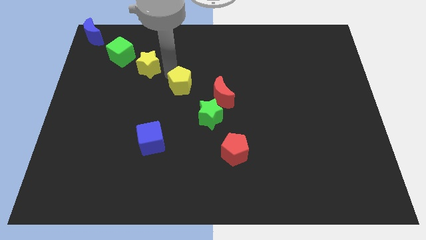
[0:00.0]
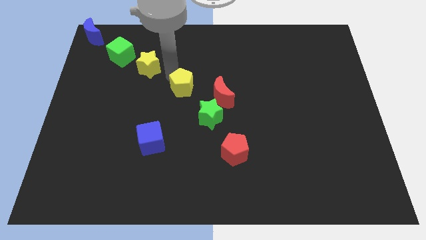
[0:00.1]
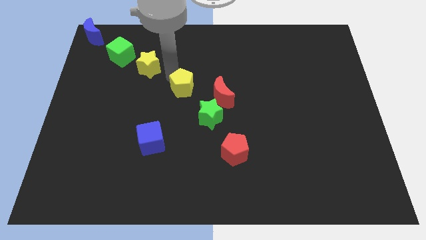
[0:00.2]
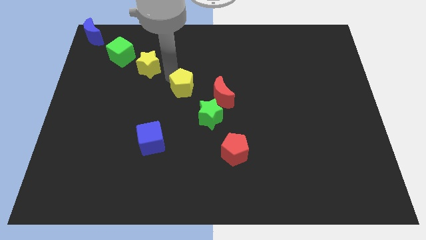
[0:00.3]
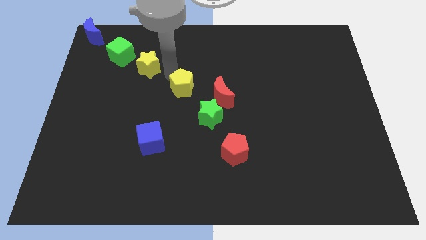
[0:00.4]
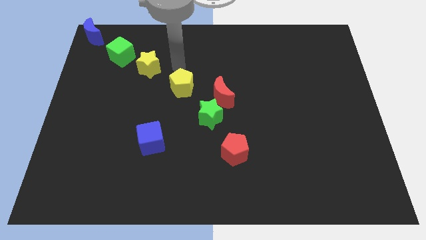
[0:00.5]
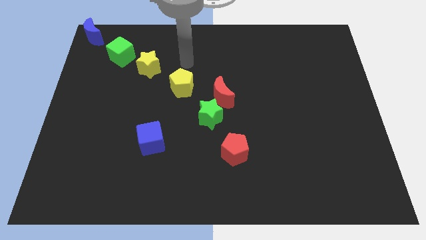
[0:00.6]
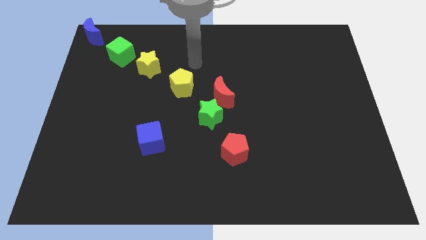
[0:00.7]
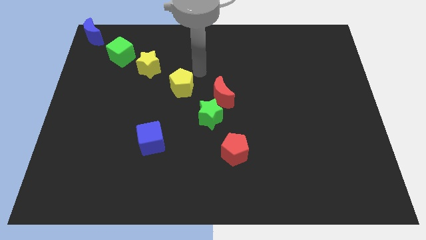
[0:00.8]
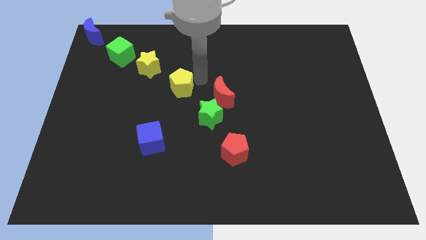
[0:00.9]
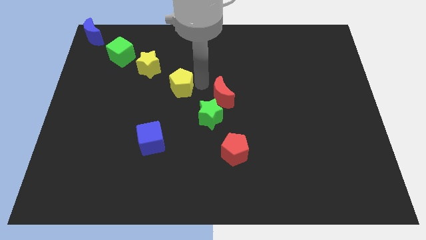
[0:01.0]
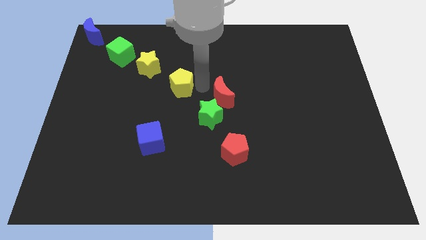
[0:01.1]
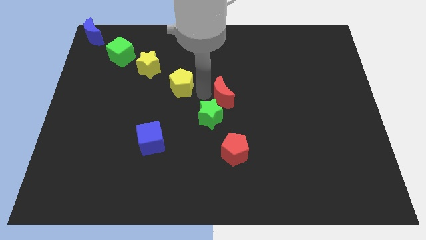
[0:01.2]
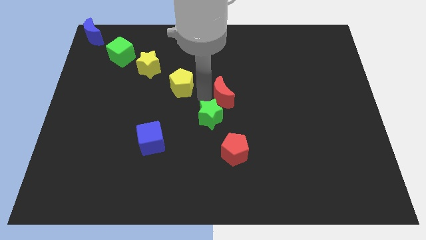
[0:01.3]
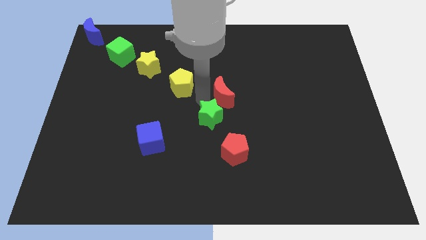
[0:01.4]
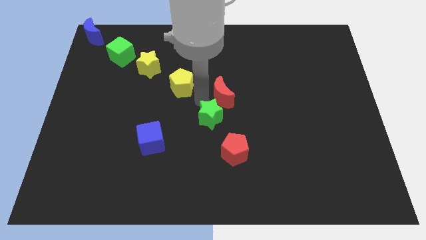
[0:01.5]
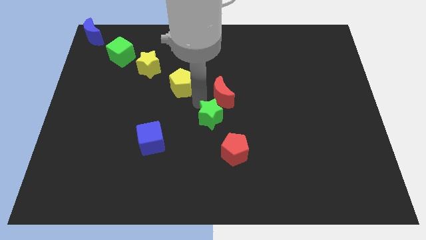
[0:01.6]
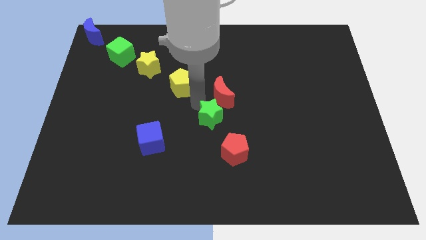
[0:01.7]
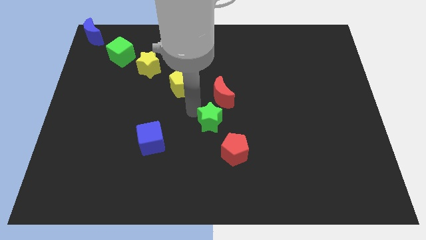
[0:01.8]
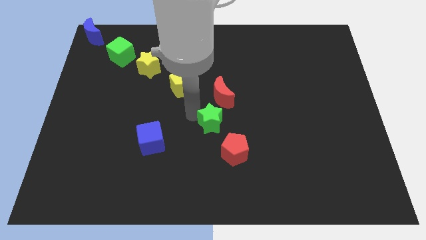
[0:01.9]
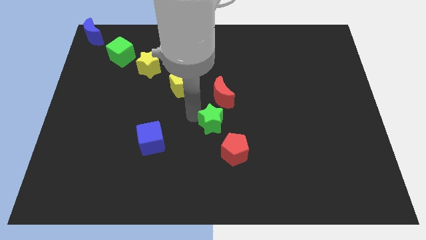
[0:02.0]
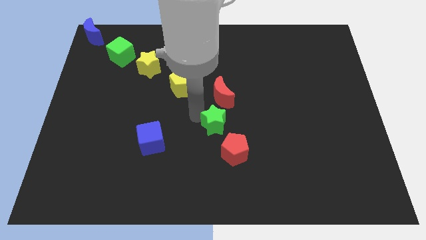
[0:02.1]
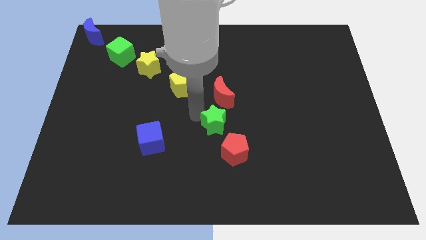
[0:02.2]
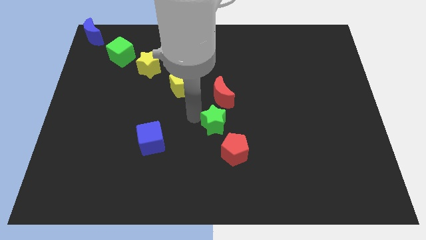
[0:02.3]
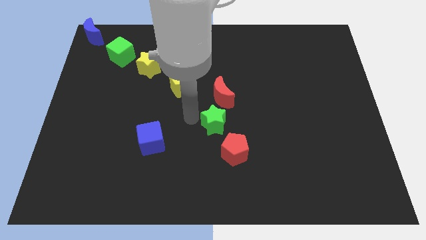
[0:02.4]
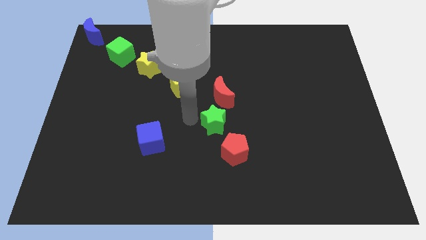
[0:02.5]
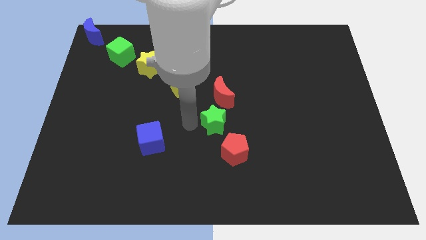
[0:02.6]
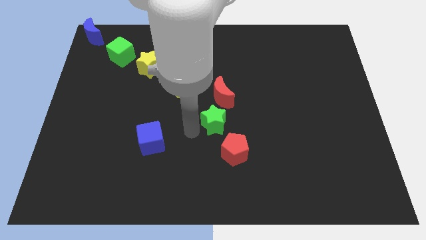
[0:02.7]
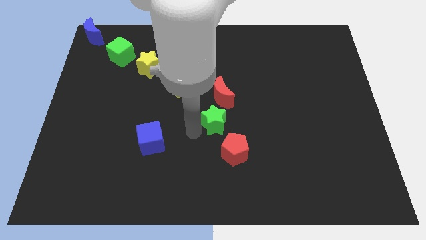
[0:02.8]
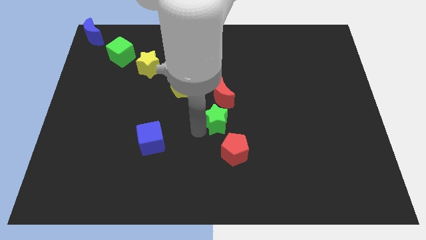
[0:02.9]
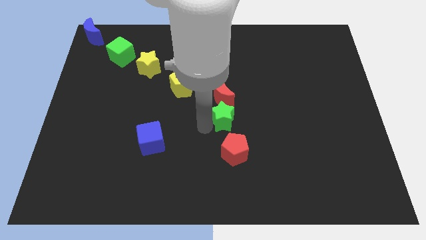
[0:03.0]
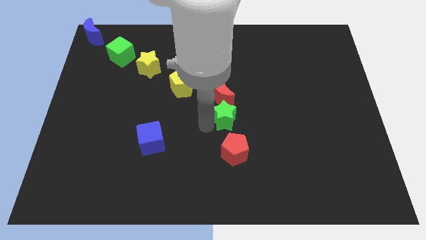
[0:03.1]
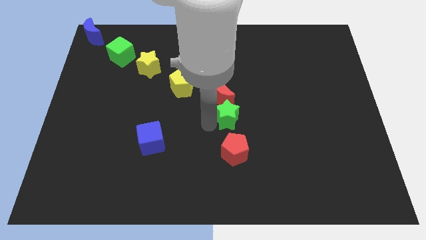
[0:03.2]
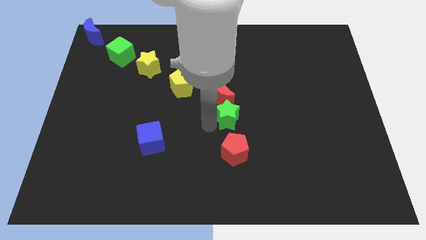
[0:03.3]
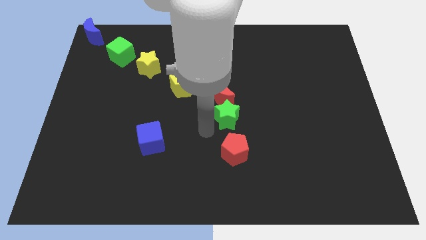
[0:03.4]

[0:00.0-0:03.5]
move the green star close to the red crescent

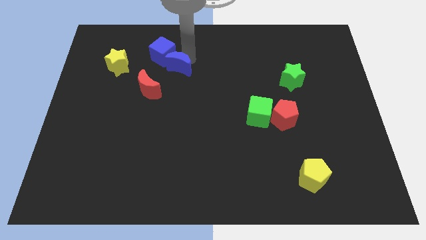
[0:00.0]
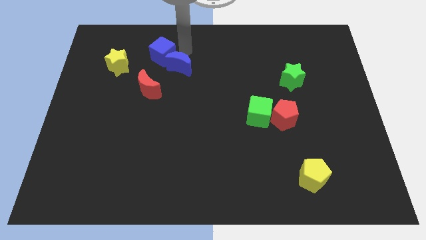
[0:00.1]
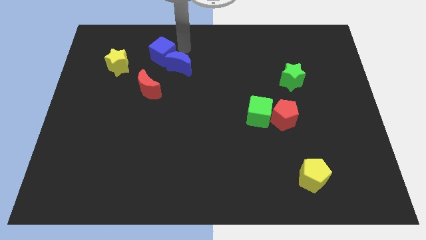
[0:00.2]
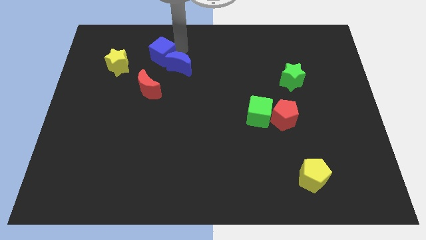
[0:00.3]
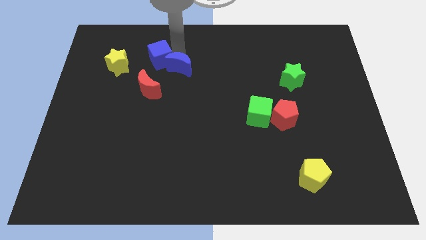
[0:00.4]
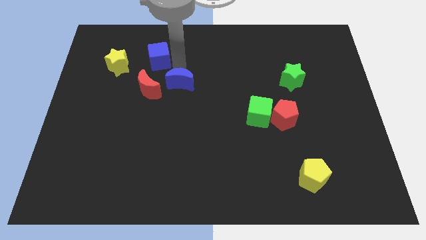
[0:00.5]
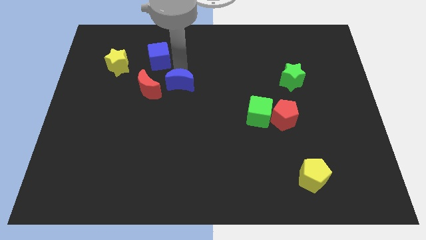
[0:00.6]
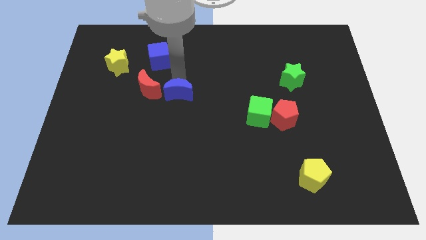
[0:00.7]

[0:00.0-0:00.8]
place the blue moon at the bottom right side of red moon

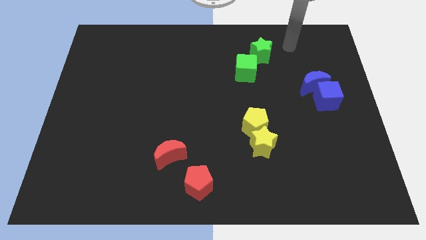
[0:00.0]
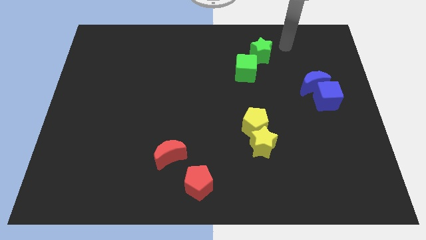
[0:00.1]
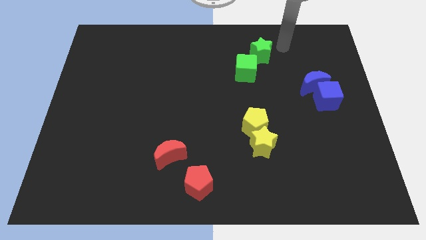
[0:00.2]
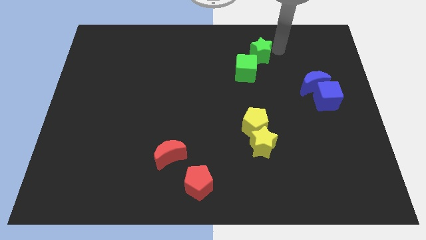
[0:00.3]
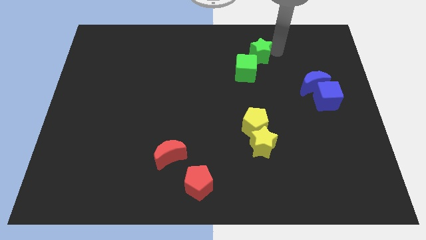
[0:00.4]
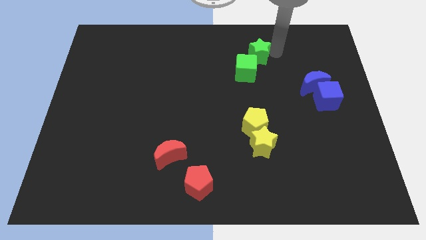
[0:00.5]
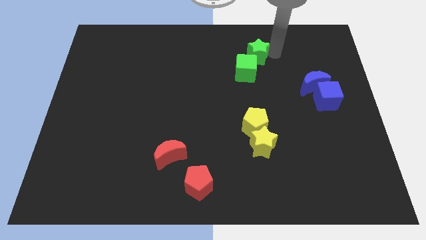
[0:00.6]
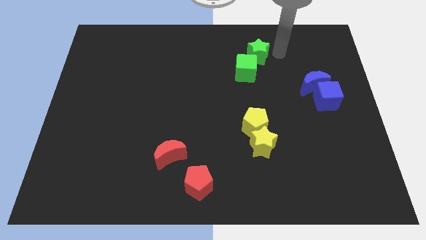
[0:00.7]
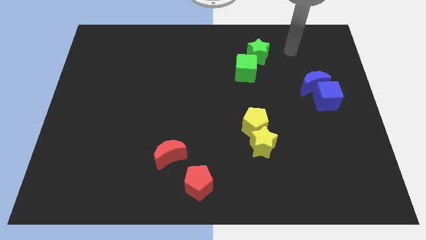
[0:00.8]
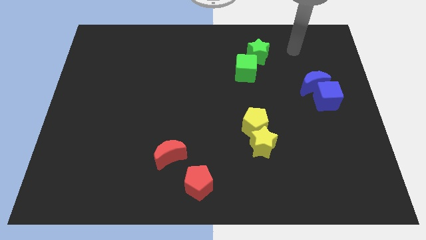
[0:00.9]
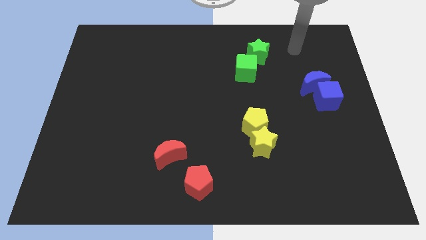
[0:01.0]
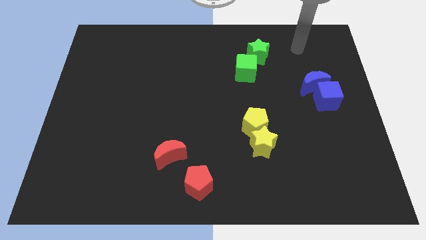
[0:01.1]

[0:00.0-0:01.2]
slide the green star close to the green cube

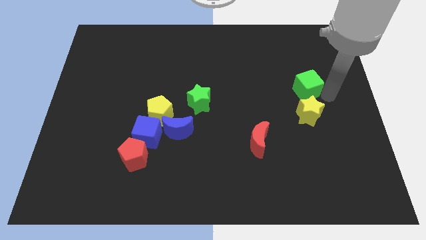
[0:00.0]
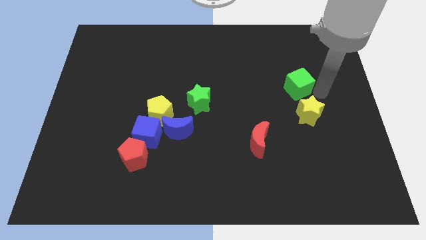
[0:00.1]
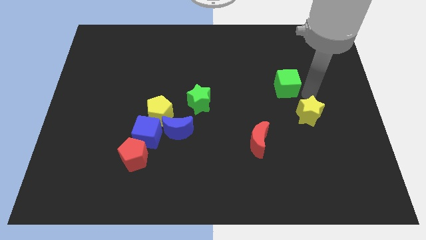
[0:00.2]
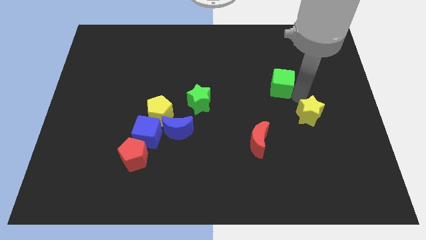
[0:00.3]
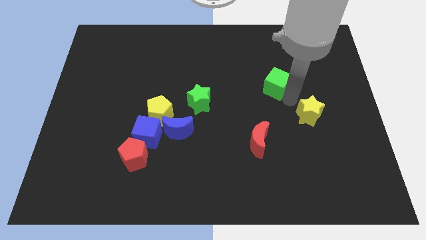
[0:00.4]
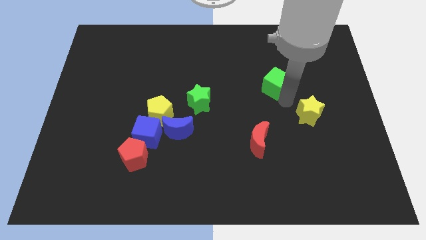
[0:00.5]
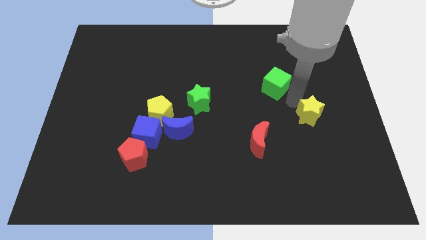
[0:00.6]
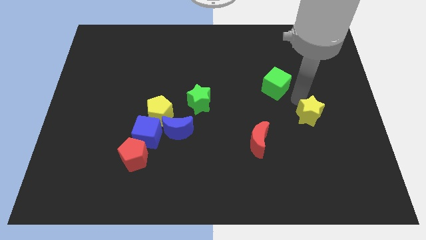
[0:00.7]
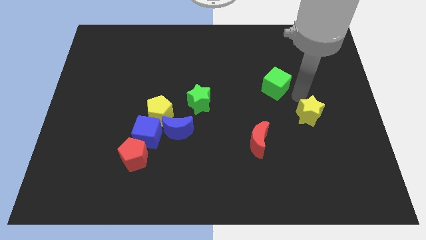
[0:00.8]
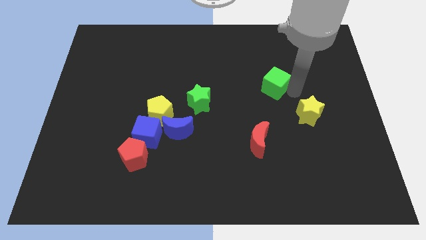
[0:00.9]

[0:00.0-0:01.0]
move the green cube diagonally top left to the yellow star

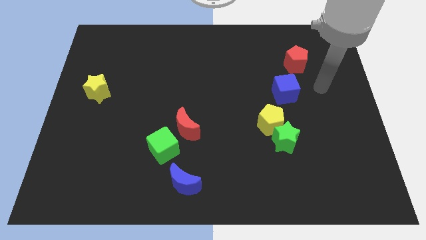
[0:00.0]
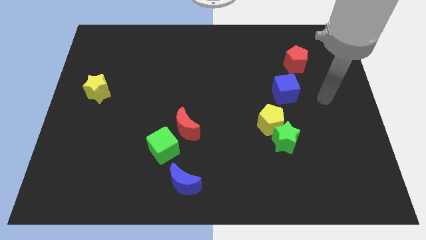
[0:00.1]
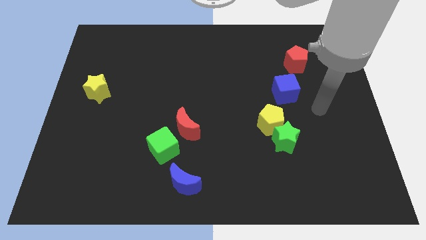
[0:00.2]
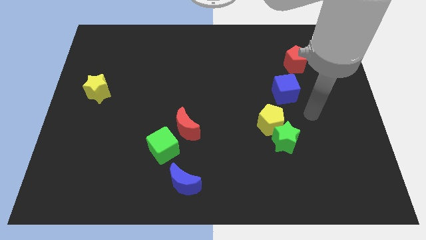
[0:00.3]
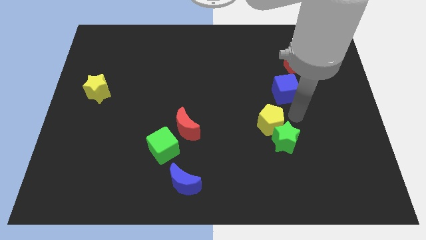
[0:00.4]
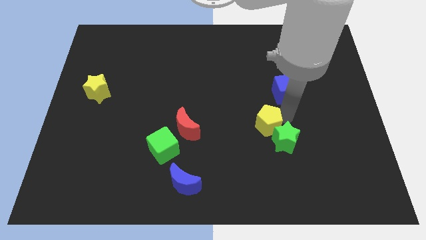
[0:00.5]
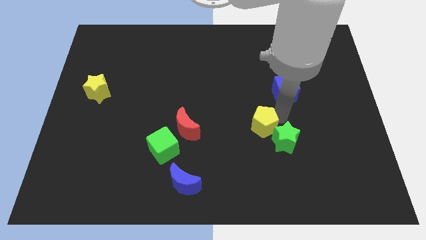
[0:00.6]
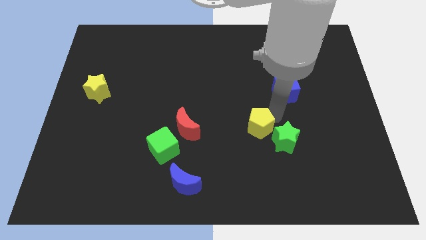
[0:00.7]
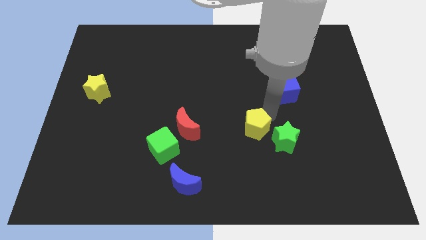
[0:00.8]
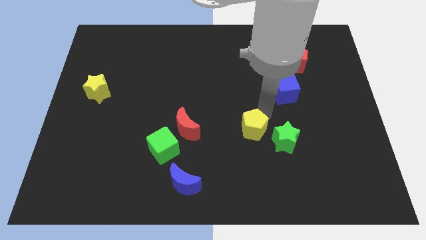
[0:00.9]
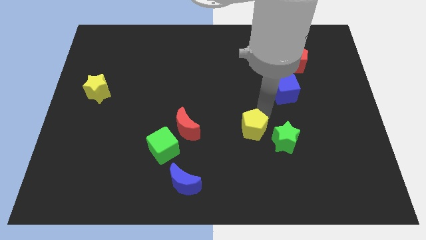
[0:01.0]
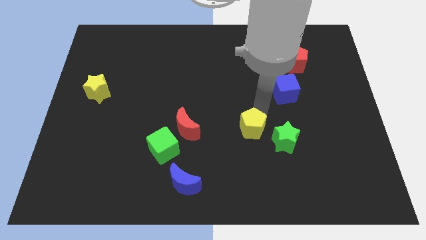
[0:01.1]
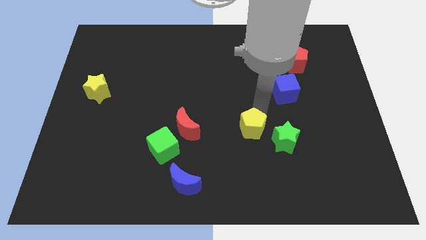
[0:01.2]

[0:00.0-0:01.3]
separate the yellow pentagon from the green star

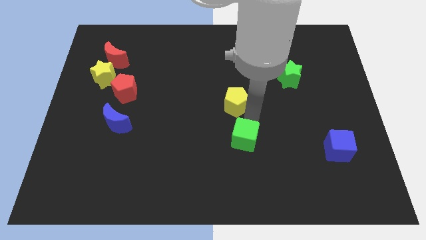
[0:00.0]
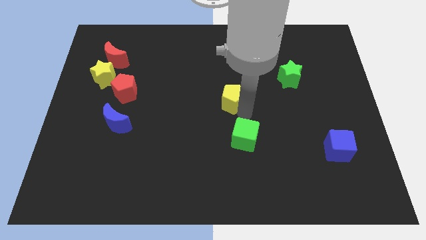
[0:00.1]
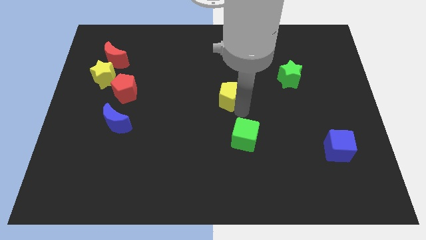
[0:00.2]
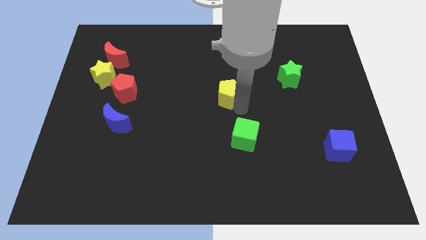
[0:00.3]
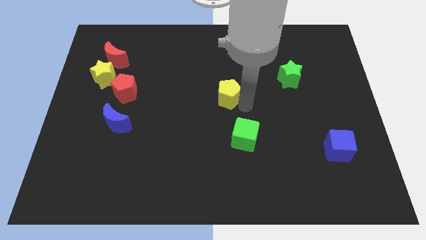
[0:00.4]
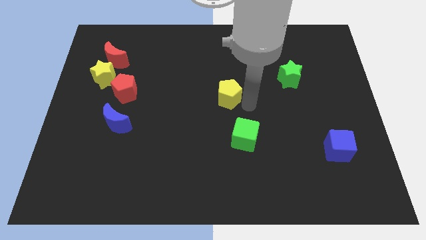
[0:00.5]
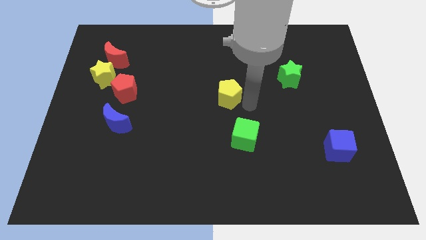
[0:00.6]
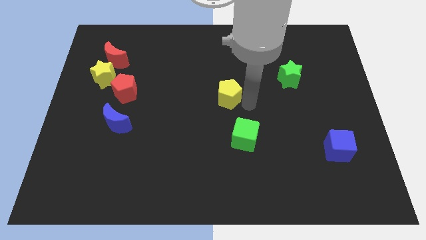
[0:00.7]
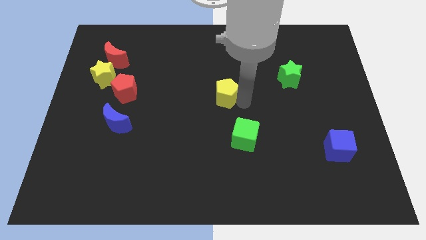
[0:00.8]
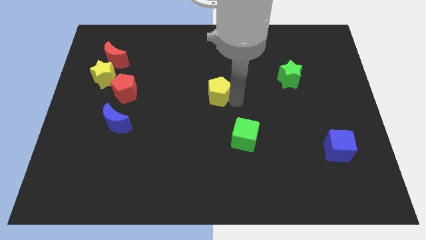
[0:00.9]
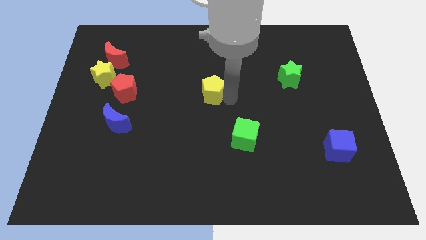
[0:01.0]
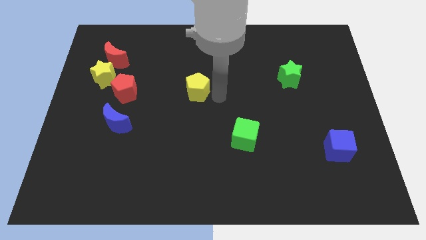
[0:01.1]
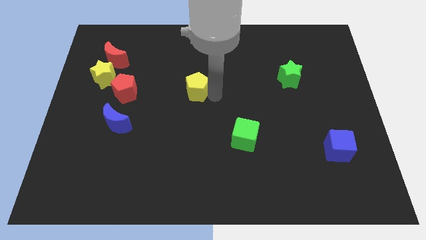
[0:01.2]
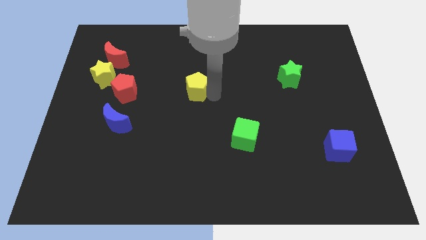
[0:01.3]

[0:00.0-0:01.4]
place the yellow pentagon in between the red pentagon and green star
